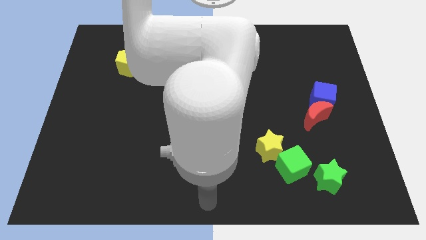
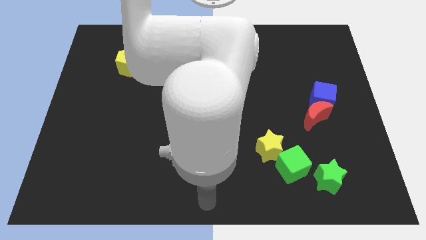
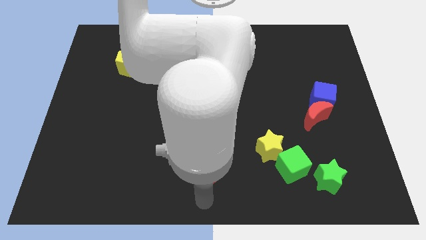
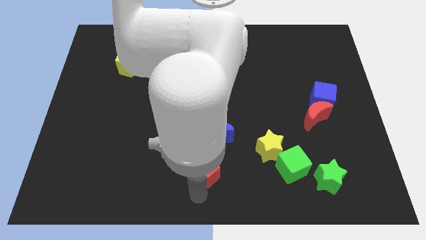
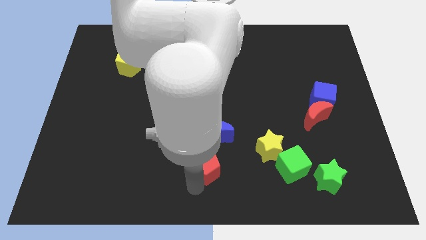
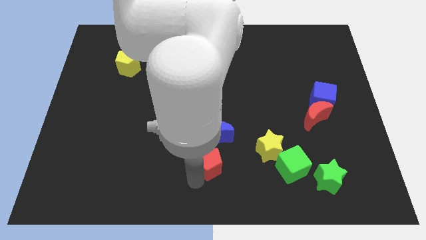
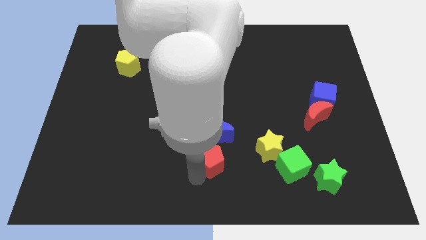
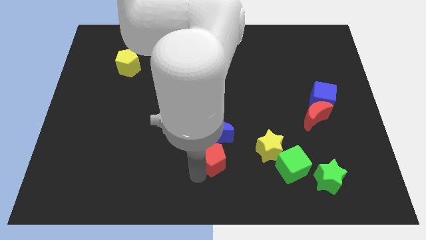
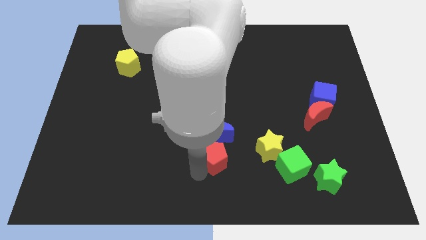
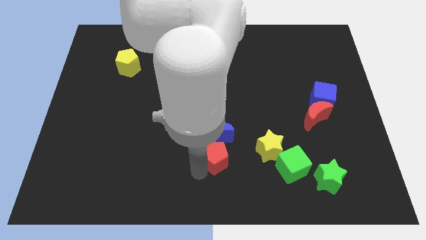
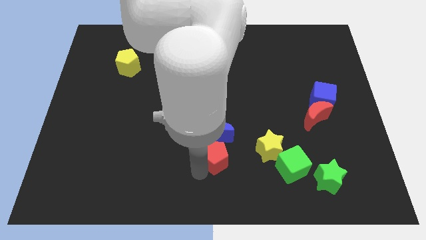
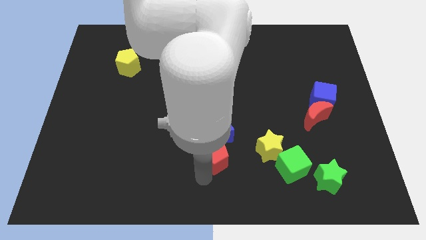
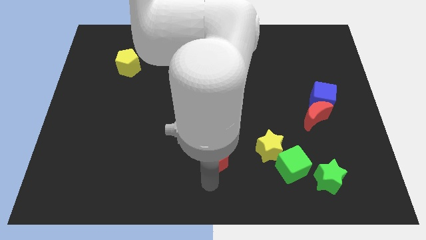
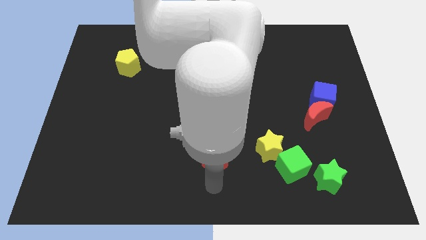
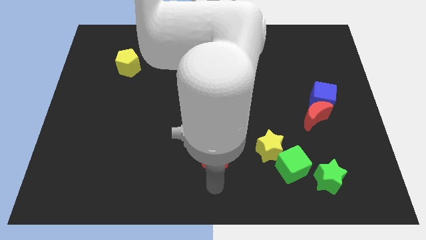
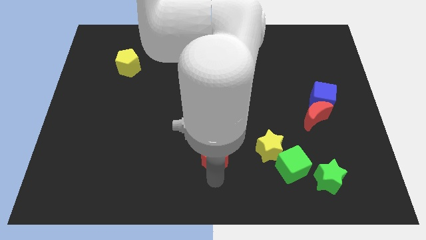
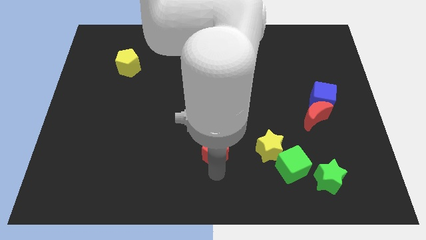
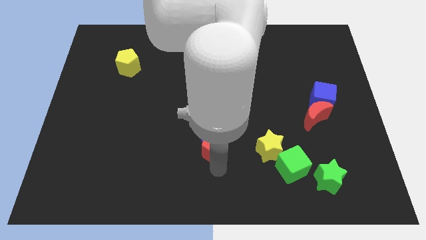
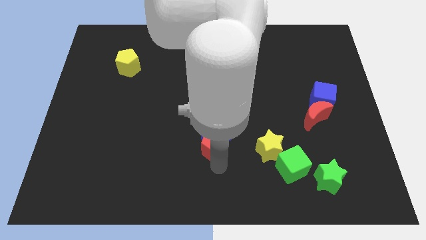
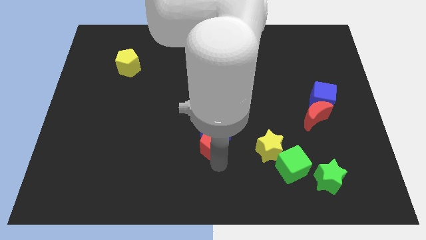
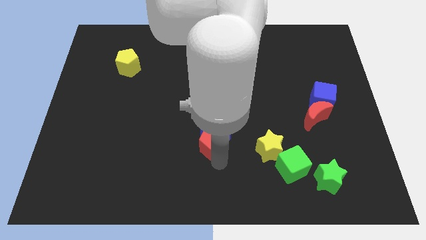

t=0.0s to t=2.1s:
push red pentagon into blue moon

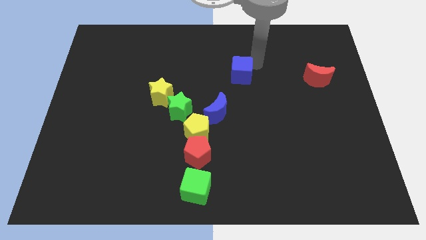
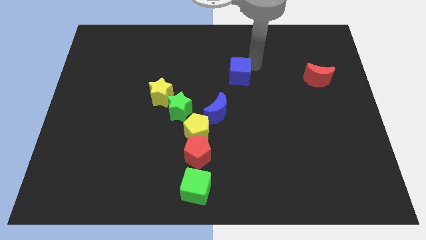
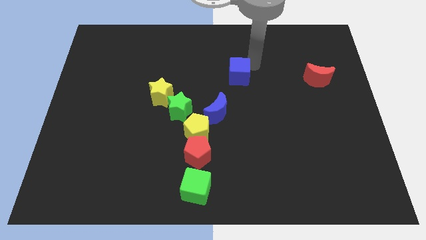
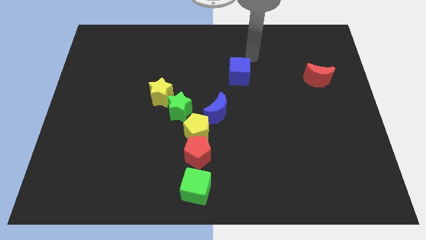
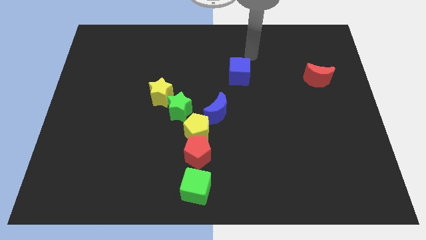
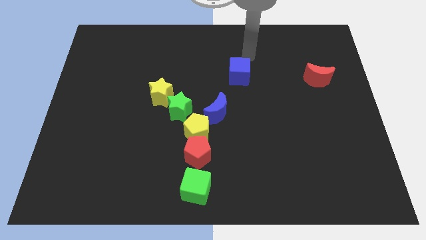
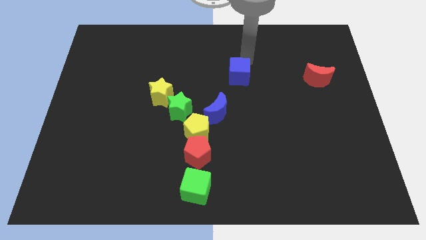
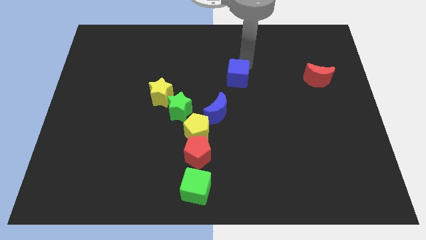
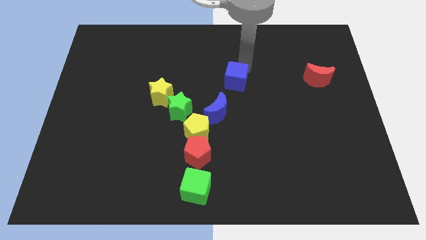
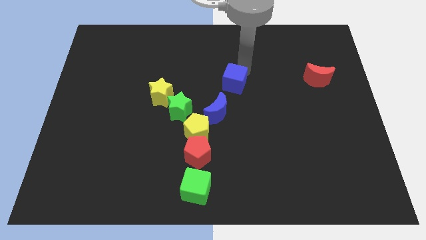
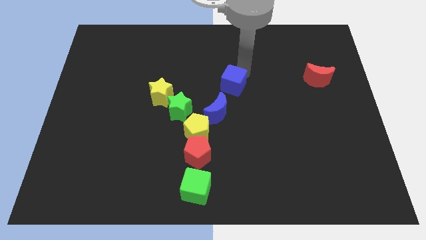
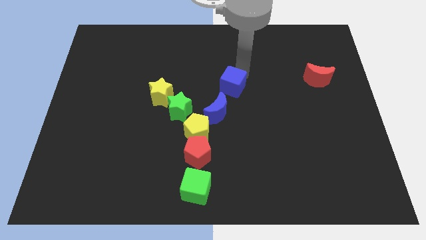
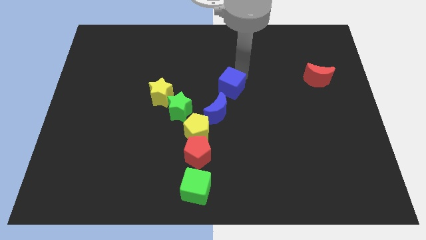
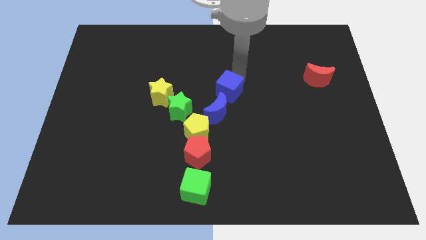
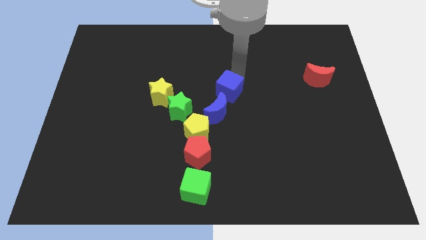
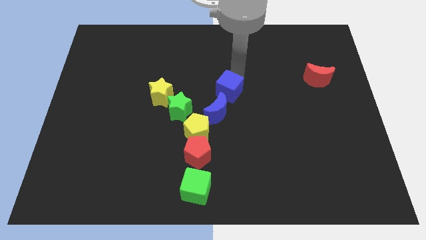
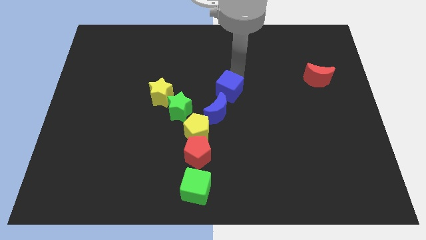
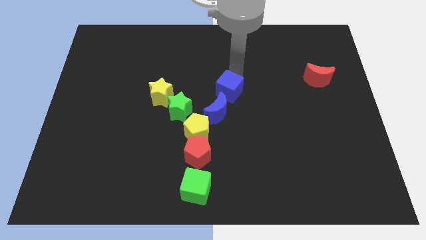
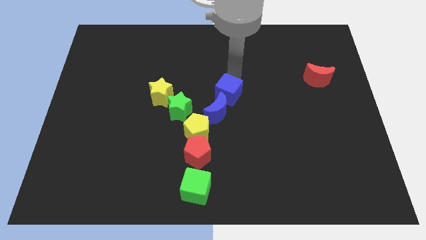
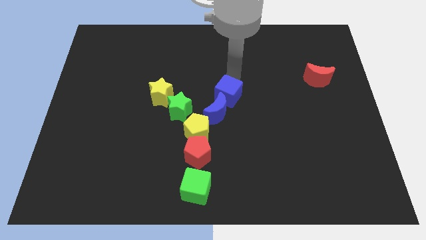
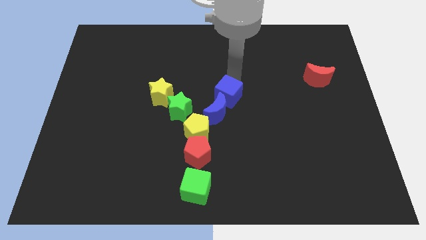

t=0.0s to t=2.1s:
push blue cube into blue moon

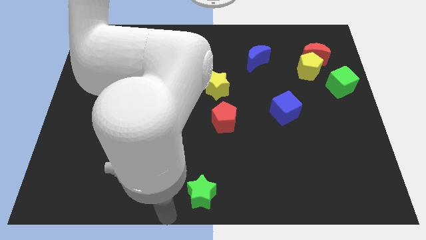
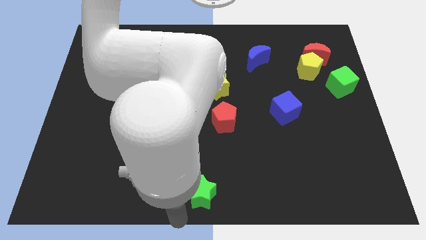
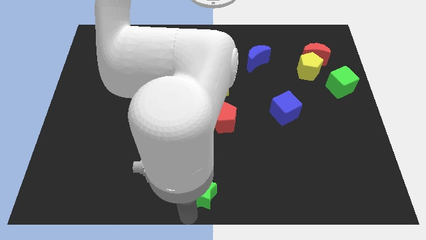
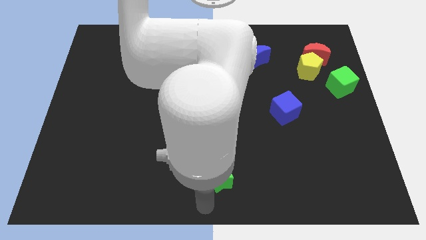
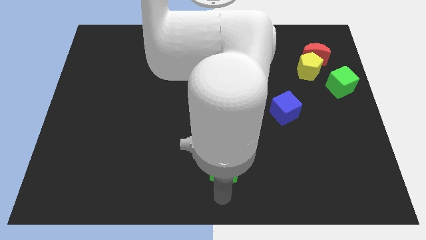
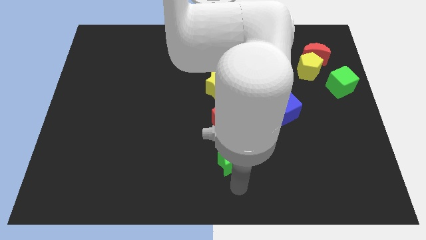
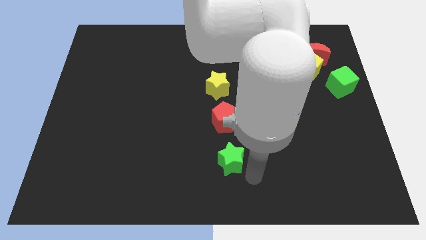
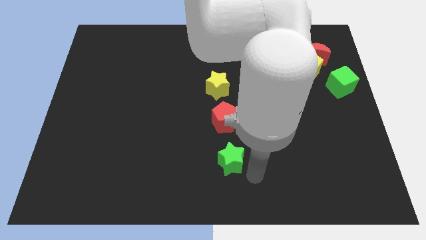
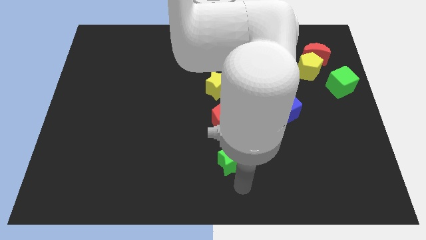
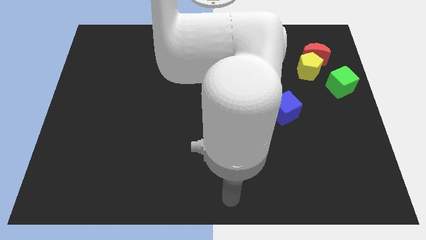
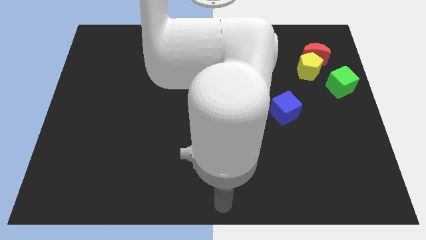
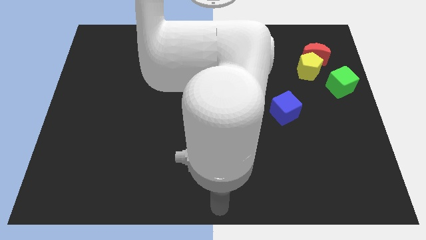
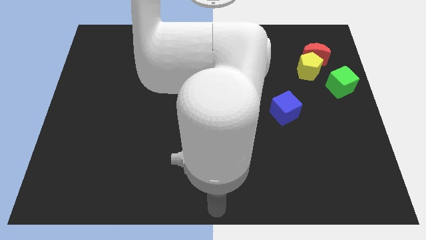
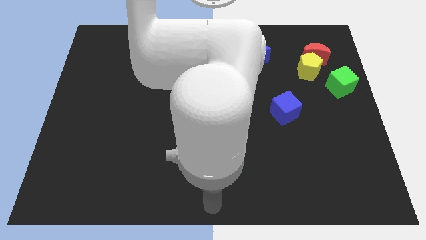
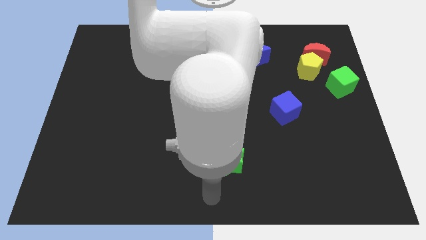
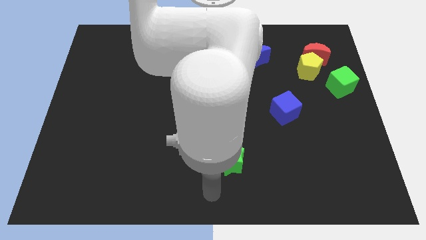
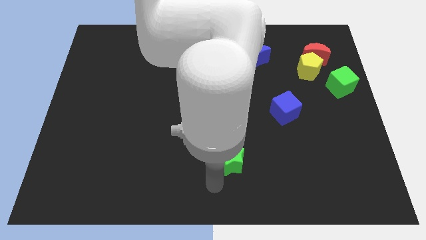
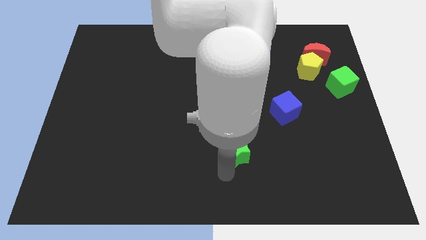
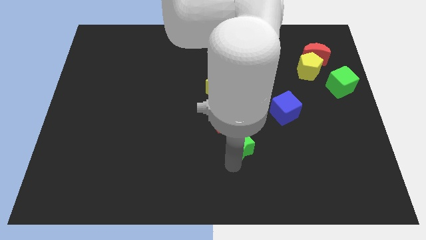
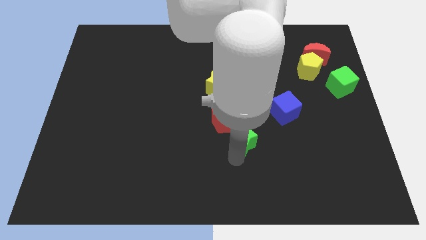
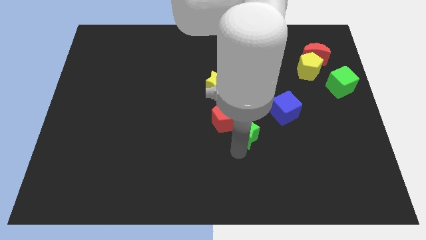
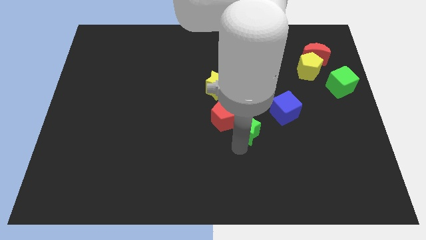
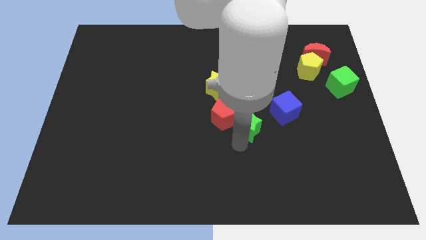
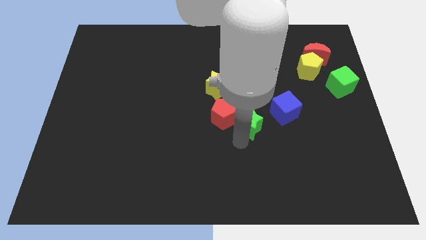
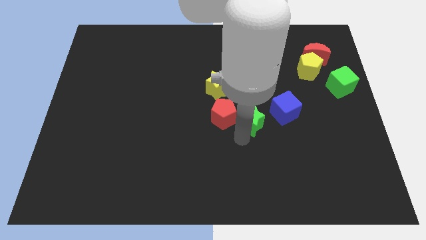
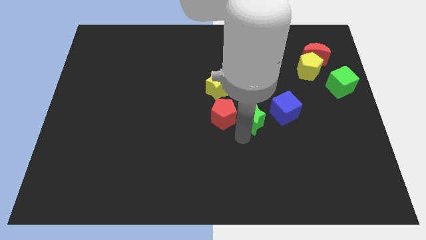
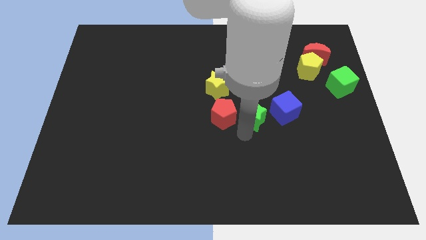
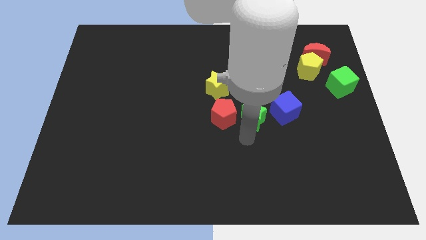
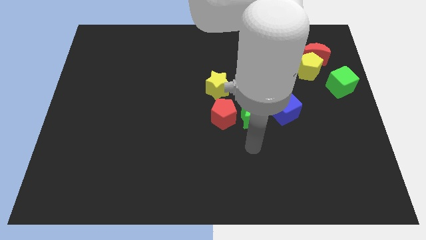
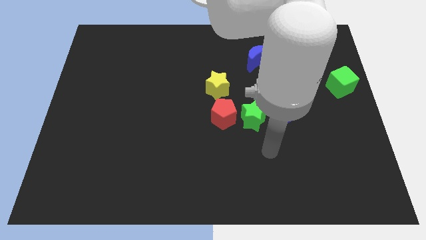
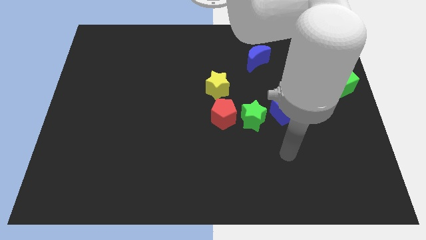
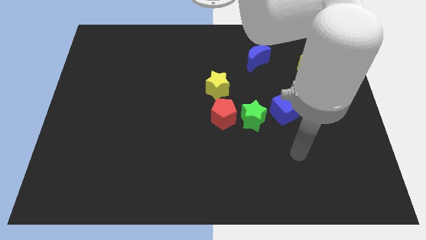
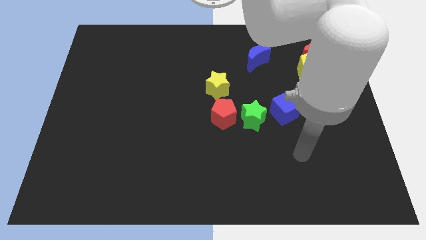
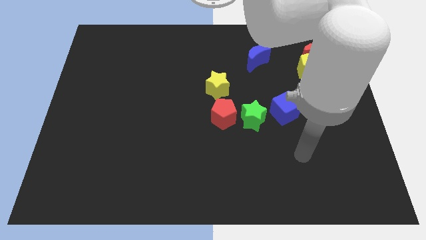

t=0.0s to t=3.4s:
move the green star between the red pentagon and blue cube

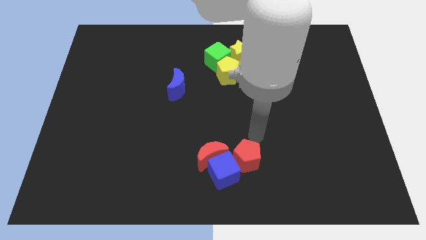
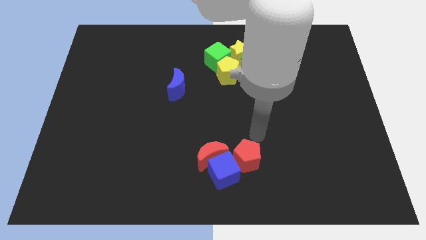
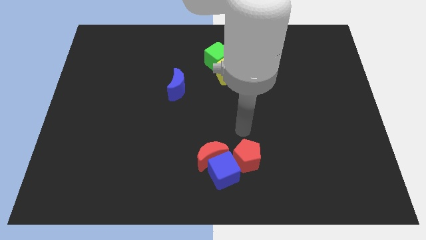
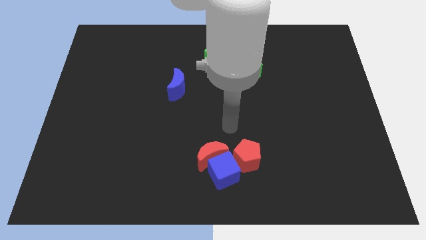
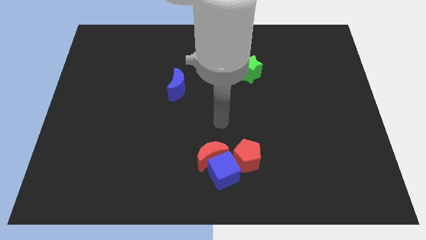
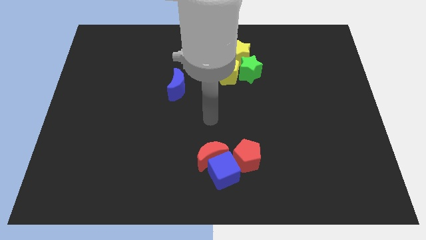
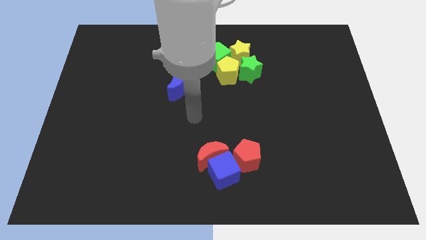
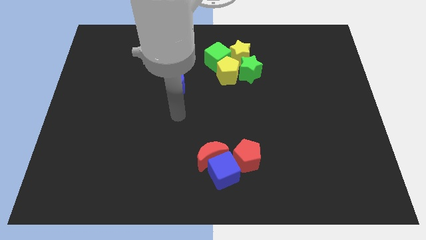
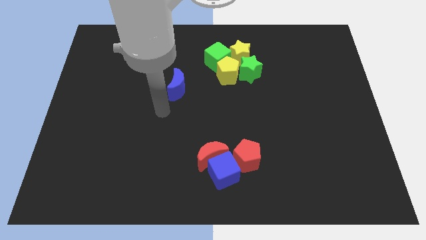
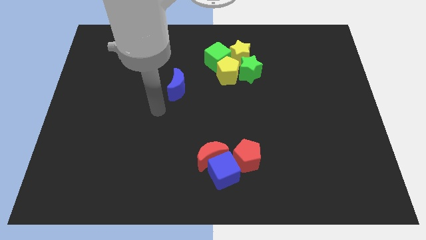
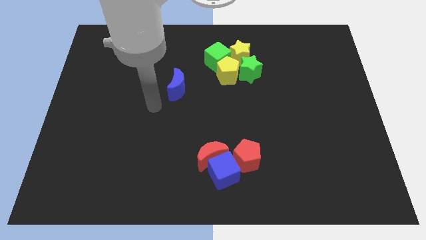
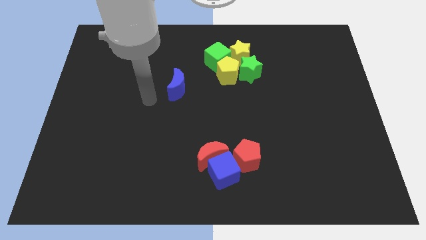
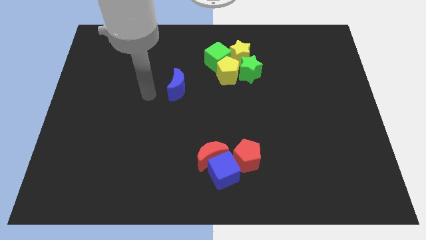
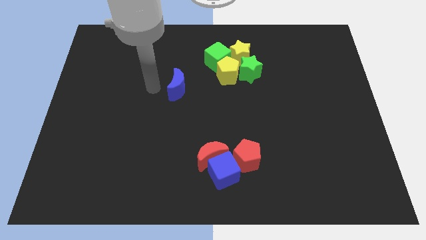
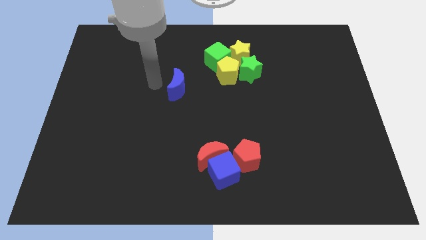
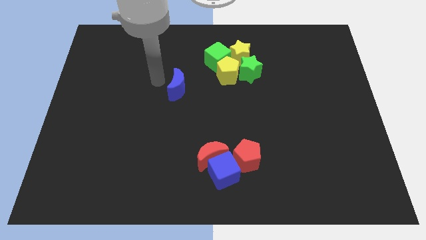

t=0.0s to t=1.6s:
move your arm to the left of the blue crescent
